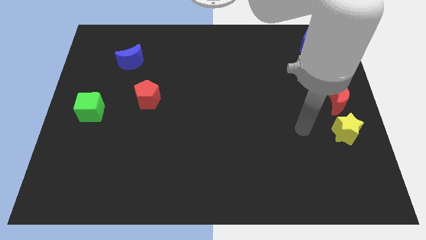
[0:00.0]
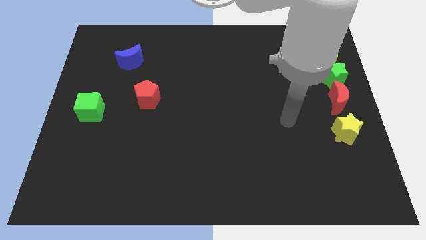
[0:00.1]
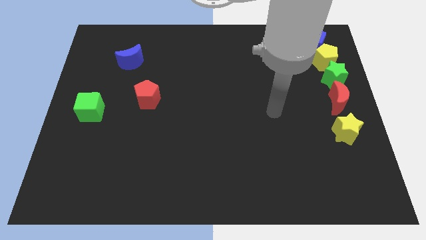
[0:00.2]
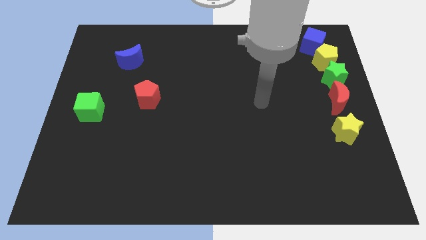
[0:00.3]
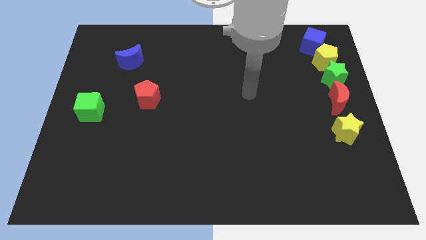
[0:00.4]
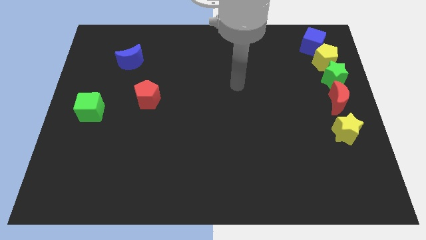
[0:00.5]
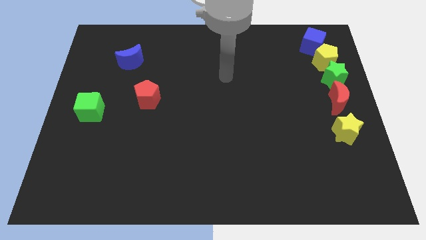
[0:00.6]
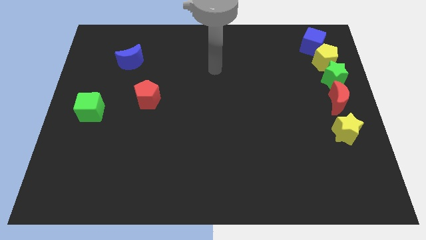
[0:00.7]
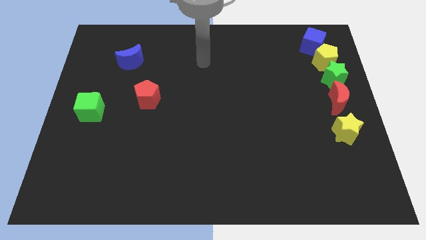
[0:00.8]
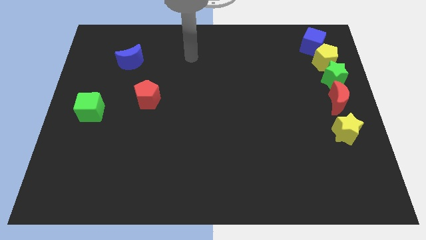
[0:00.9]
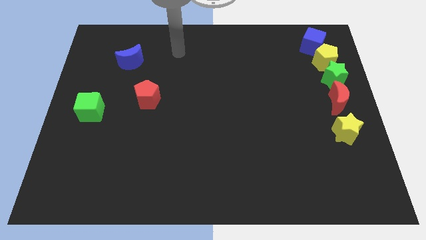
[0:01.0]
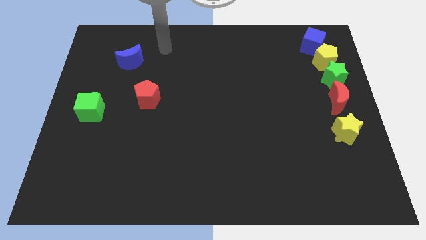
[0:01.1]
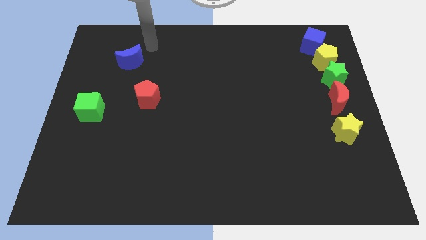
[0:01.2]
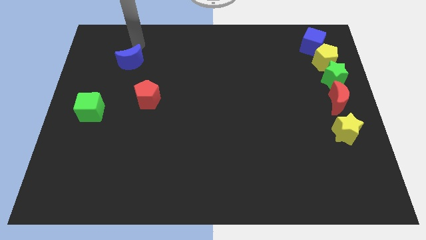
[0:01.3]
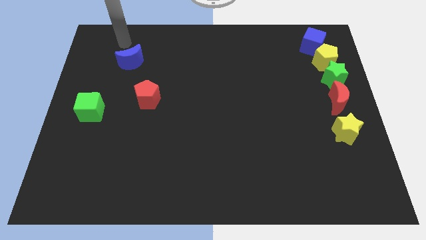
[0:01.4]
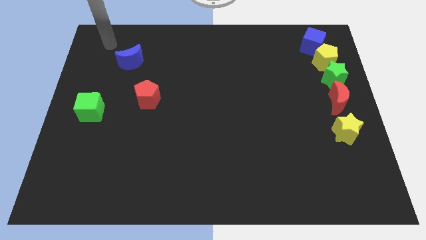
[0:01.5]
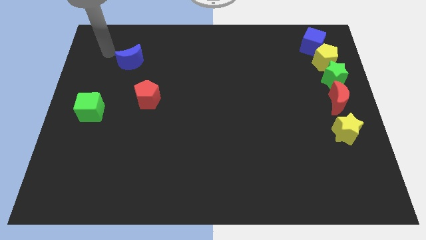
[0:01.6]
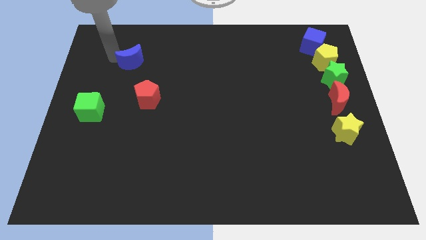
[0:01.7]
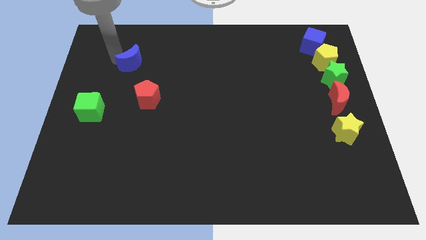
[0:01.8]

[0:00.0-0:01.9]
point your arm above blue moon

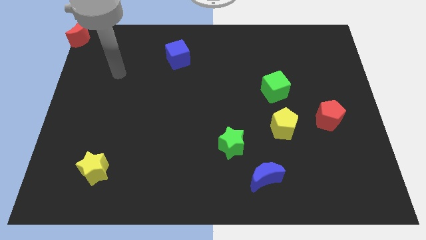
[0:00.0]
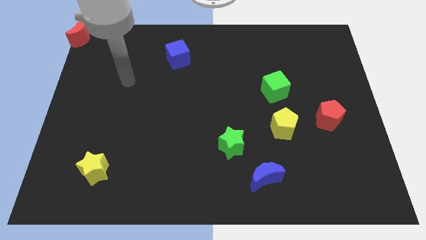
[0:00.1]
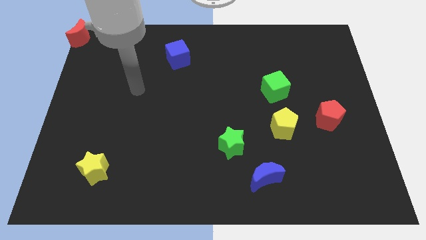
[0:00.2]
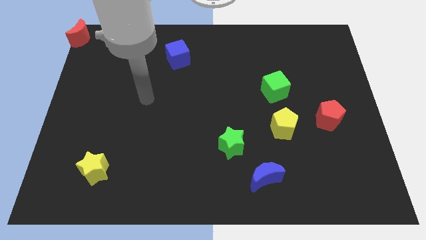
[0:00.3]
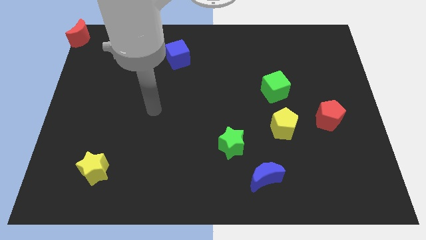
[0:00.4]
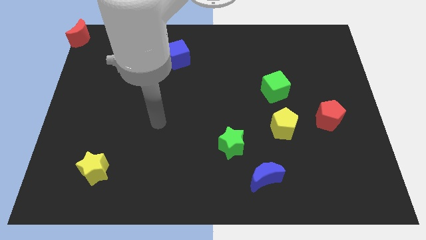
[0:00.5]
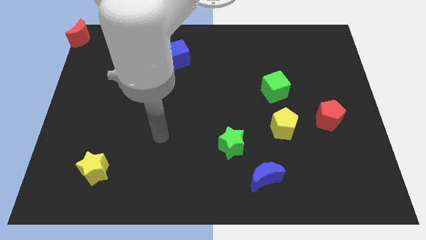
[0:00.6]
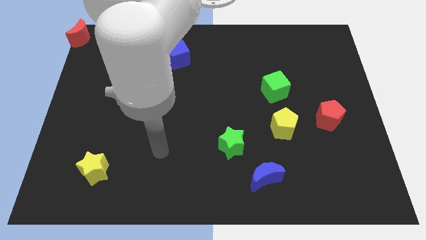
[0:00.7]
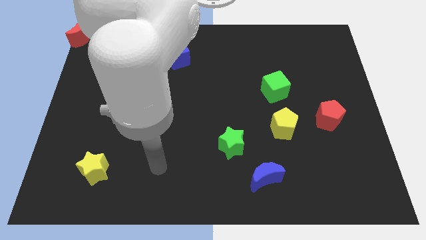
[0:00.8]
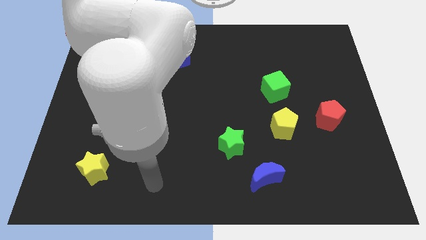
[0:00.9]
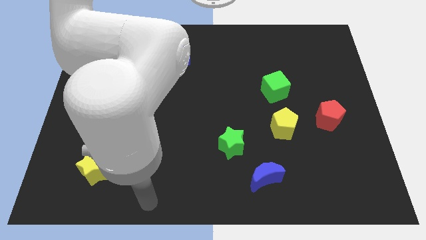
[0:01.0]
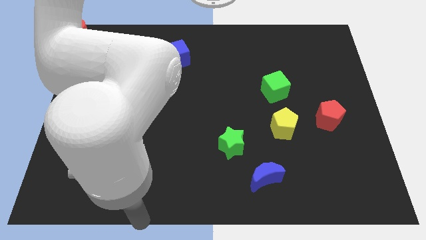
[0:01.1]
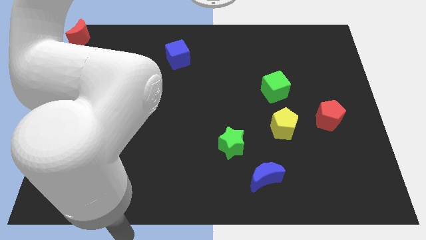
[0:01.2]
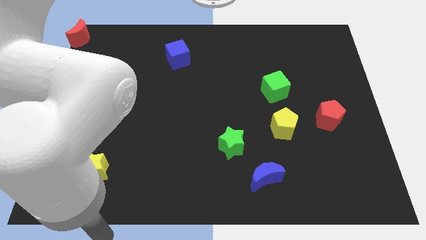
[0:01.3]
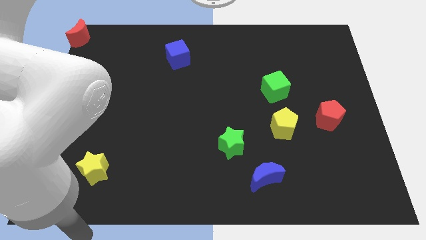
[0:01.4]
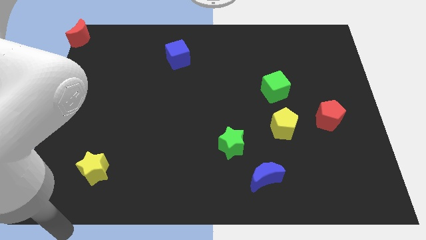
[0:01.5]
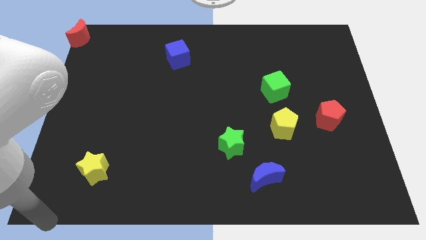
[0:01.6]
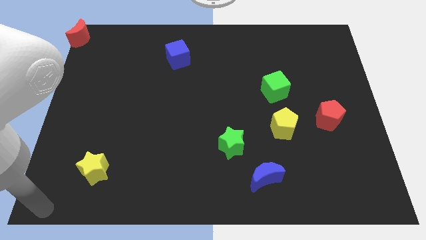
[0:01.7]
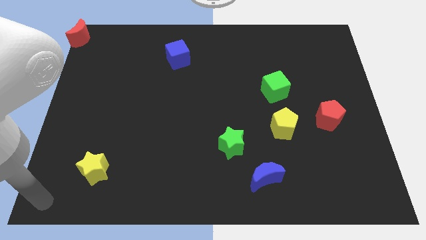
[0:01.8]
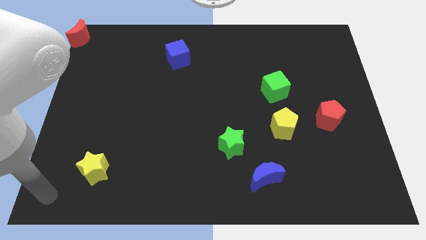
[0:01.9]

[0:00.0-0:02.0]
place your arm to the bottom left side of the yellow star

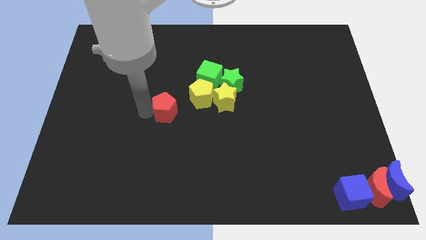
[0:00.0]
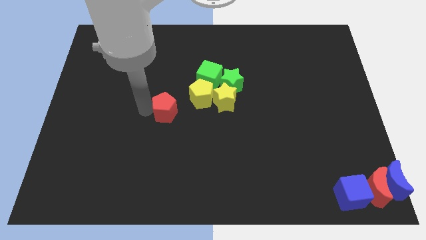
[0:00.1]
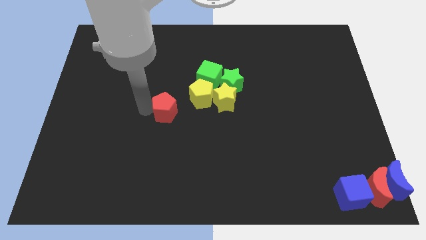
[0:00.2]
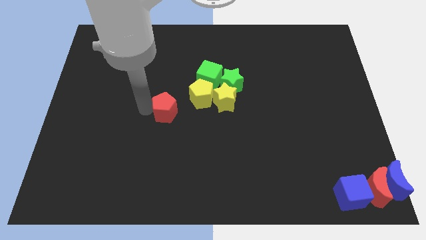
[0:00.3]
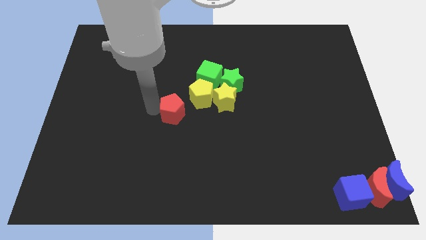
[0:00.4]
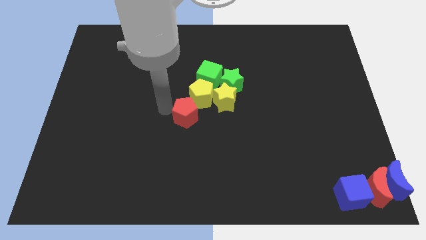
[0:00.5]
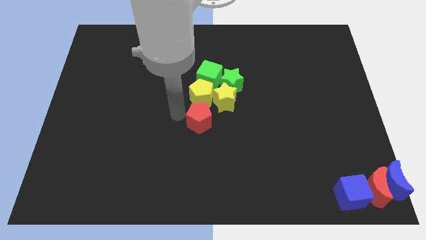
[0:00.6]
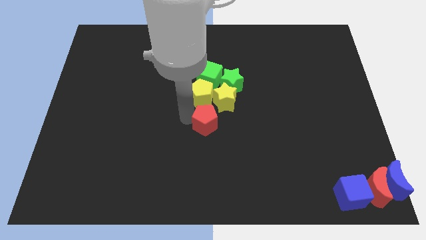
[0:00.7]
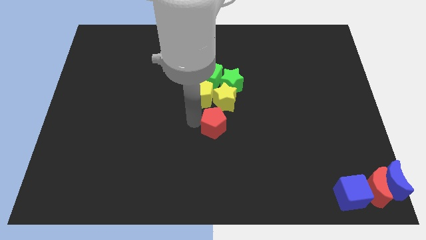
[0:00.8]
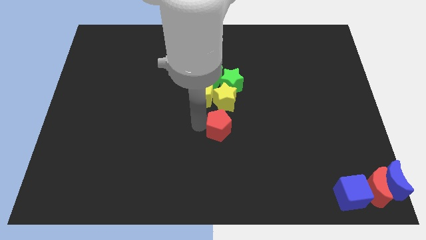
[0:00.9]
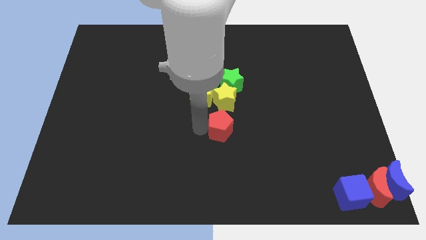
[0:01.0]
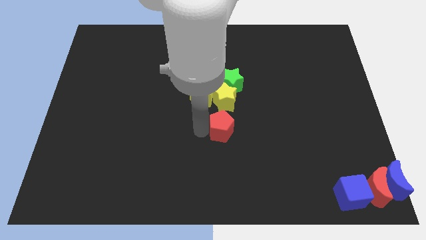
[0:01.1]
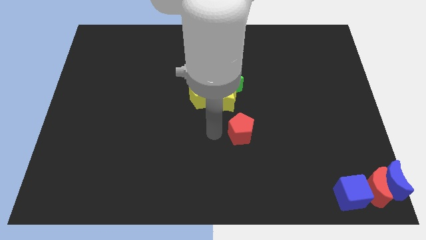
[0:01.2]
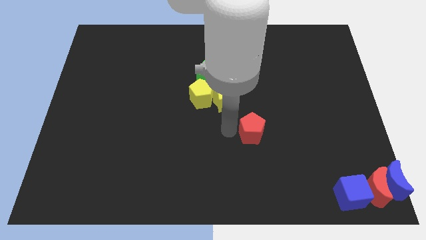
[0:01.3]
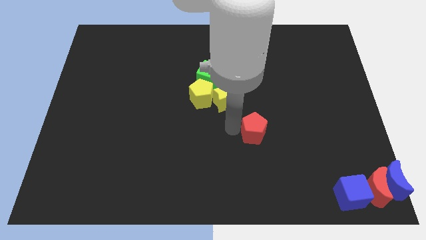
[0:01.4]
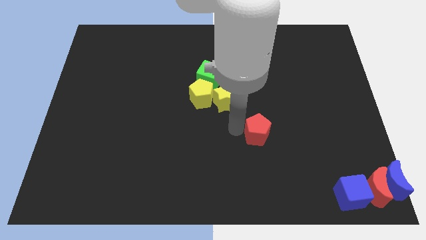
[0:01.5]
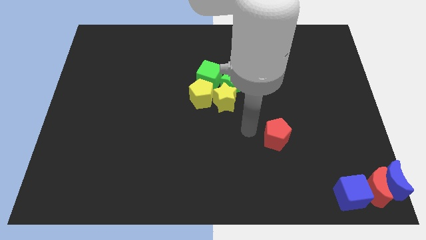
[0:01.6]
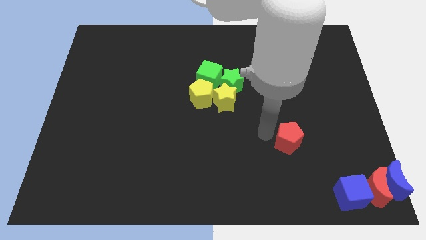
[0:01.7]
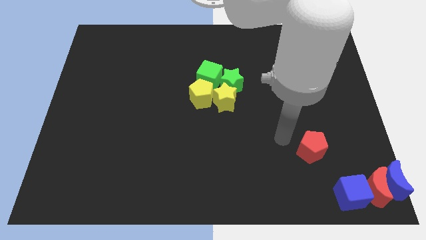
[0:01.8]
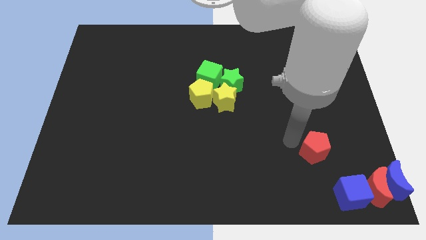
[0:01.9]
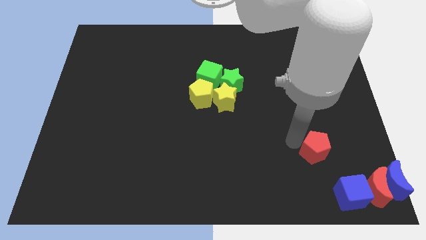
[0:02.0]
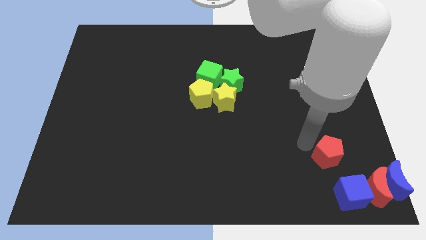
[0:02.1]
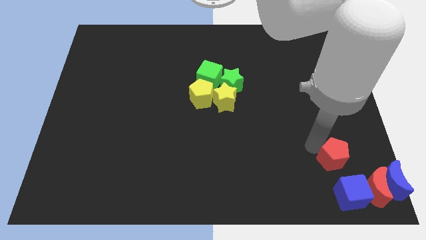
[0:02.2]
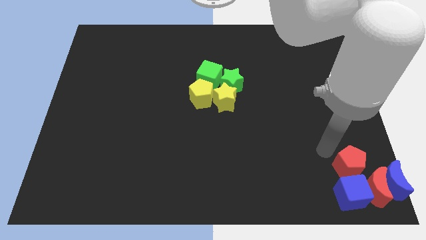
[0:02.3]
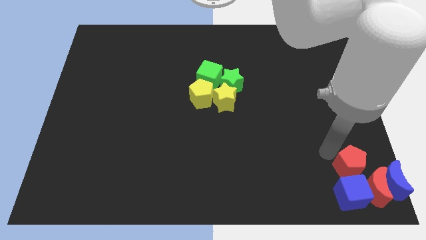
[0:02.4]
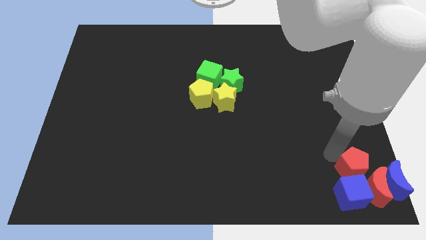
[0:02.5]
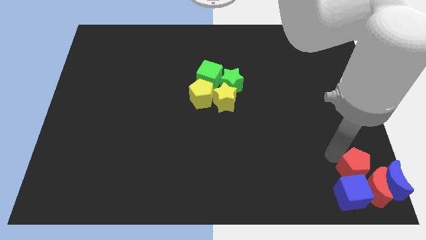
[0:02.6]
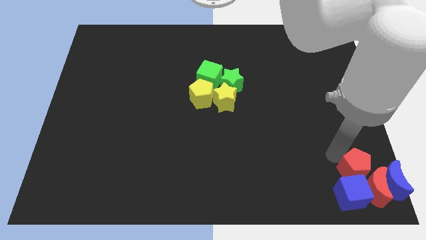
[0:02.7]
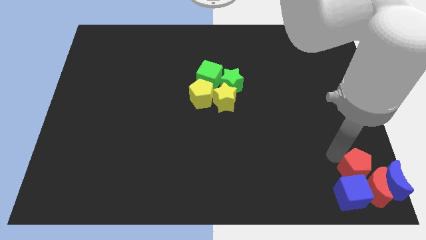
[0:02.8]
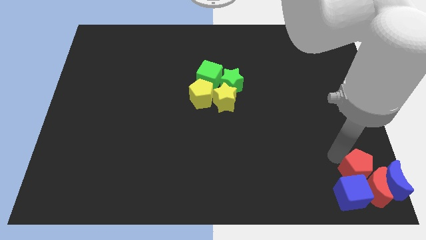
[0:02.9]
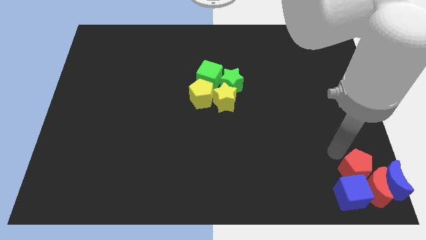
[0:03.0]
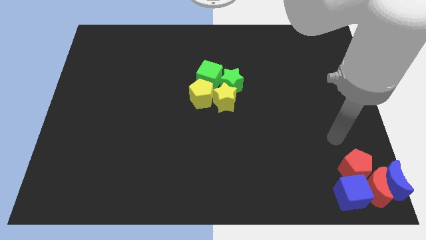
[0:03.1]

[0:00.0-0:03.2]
push the red pentagon into the group of blocks

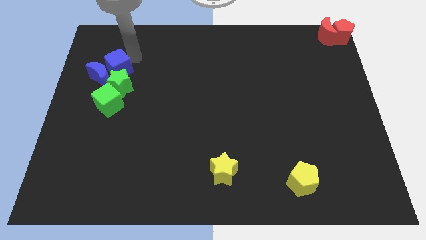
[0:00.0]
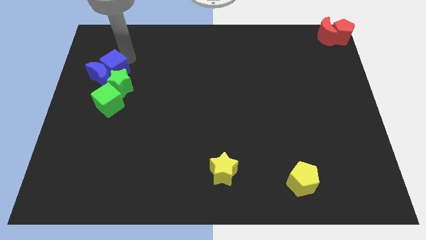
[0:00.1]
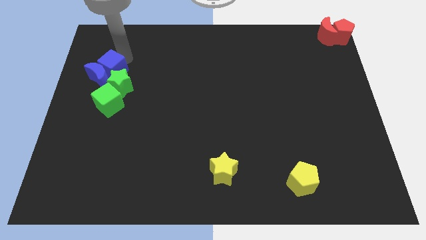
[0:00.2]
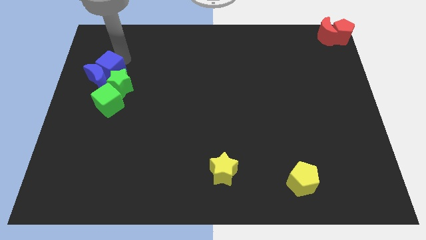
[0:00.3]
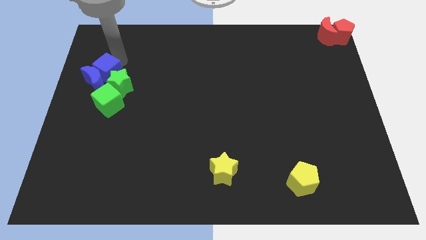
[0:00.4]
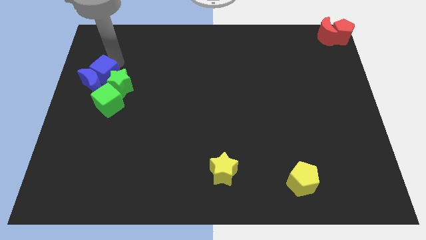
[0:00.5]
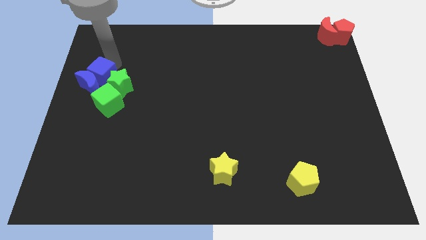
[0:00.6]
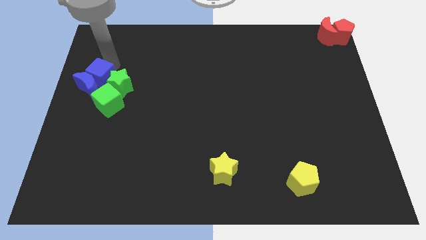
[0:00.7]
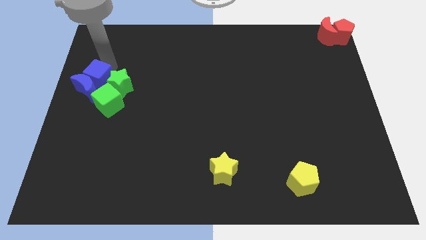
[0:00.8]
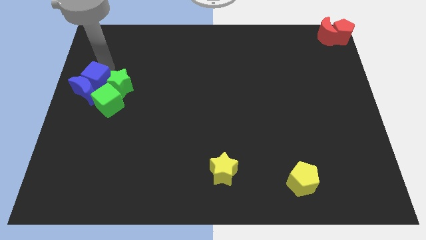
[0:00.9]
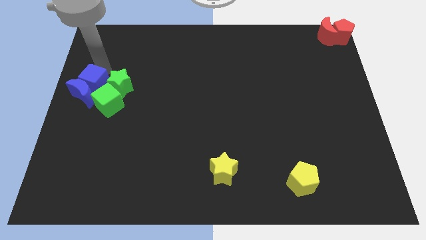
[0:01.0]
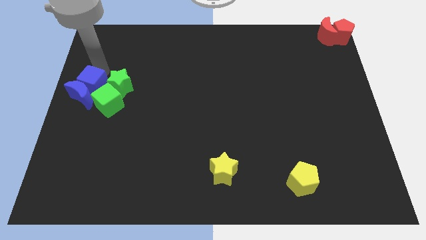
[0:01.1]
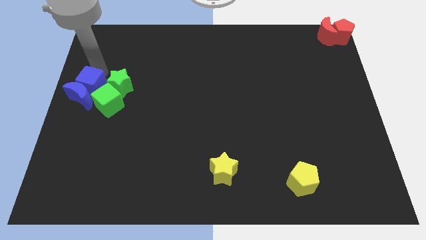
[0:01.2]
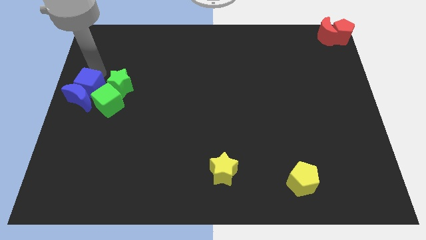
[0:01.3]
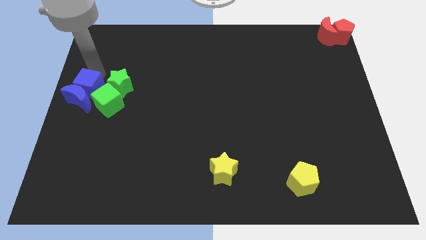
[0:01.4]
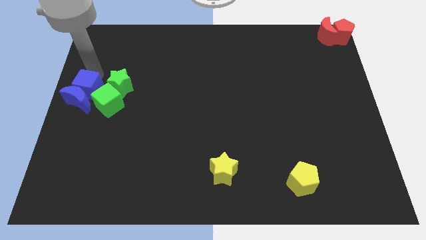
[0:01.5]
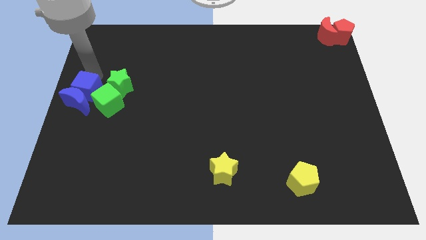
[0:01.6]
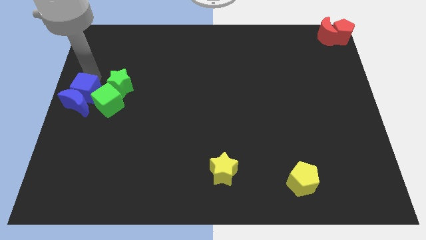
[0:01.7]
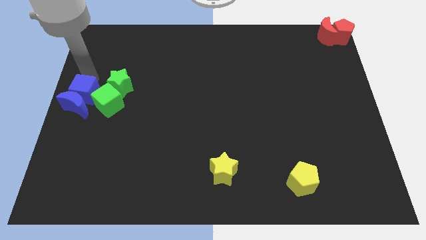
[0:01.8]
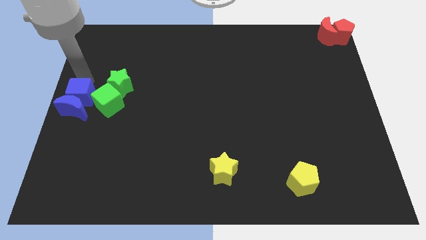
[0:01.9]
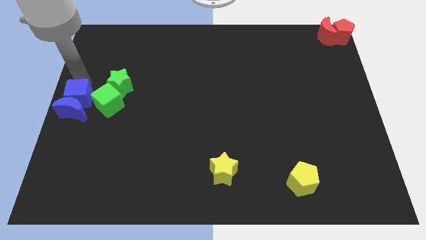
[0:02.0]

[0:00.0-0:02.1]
move the blue blocks left to the green blocks
